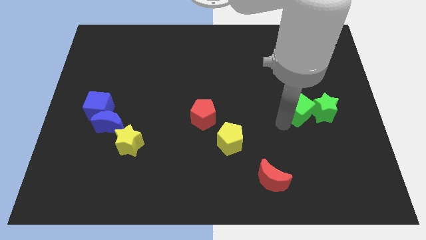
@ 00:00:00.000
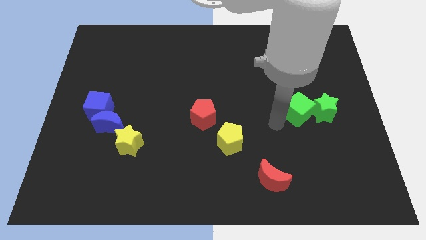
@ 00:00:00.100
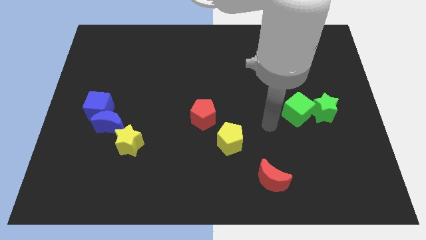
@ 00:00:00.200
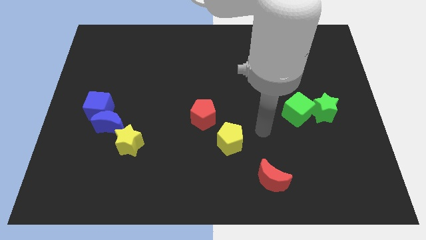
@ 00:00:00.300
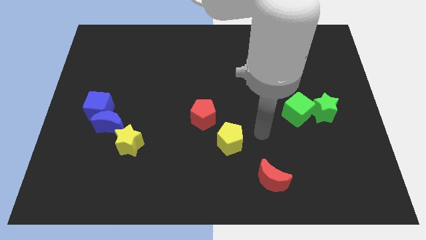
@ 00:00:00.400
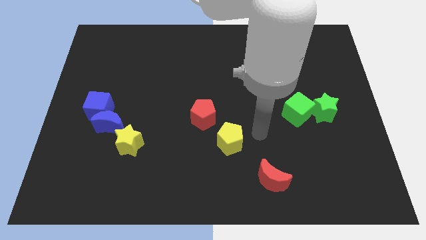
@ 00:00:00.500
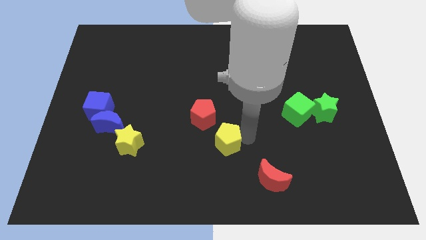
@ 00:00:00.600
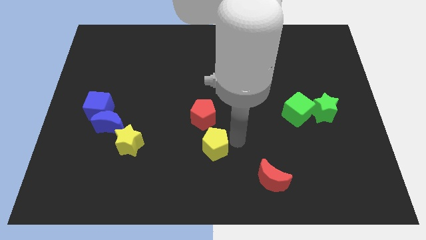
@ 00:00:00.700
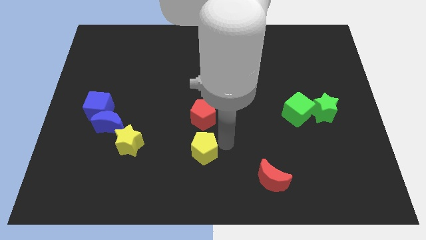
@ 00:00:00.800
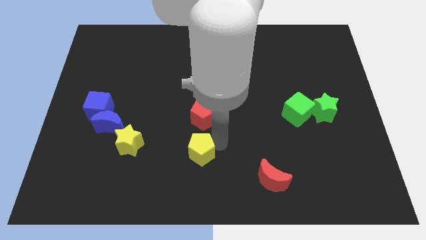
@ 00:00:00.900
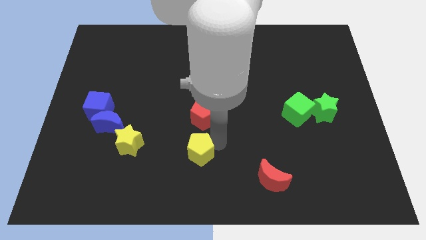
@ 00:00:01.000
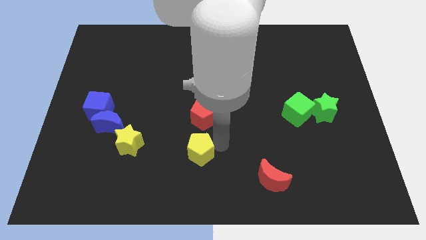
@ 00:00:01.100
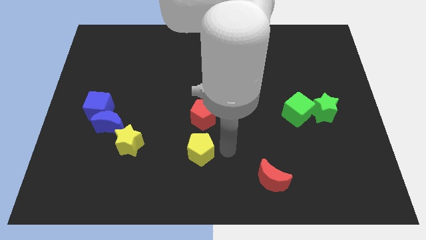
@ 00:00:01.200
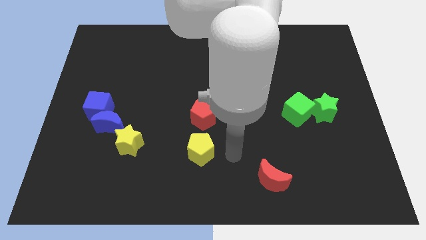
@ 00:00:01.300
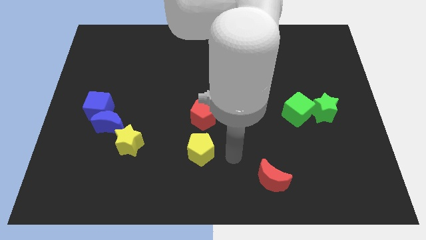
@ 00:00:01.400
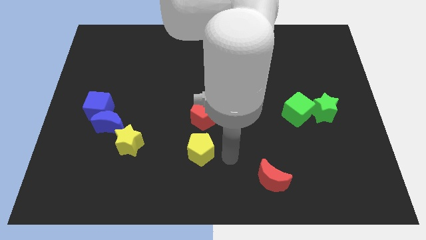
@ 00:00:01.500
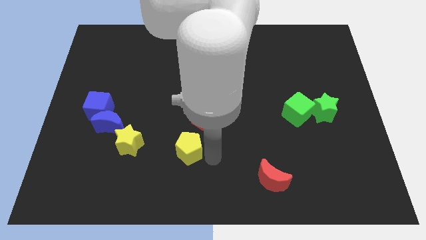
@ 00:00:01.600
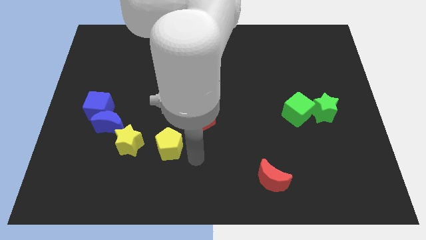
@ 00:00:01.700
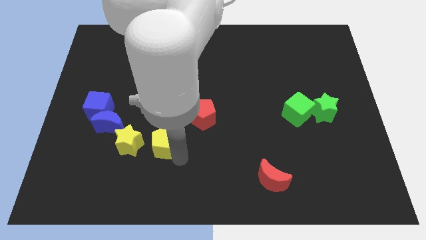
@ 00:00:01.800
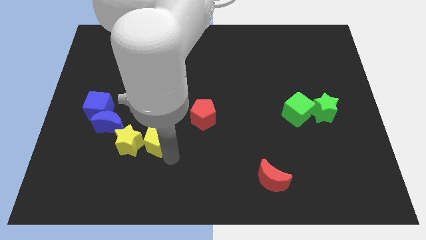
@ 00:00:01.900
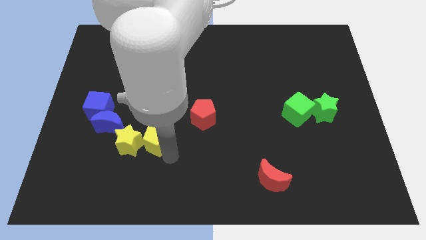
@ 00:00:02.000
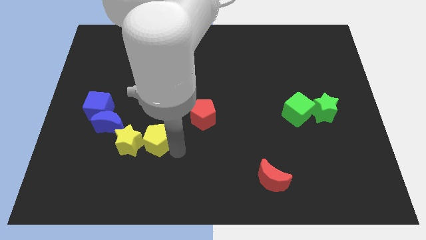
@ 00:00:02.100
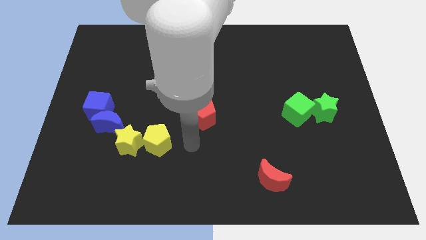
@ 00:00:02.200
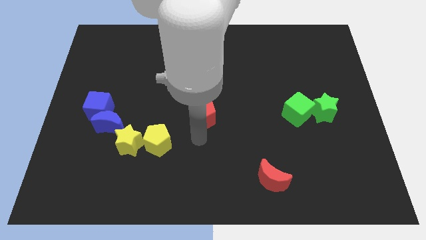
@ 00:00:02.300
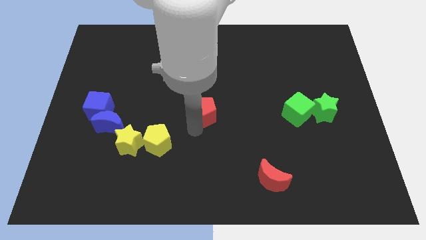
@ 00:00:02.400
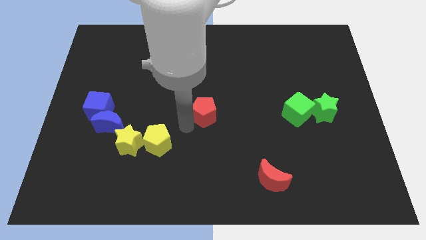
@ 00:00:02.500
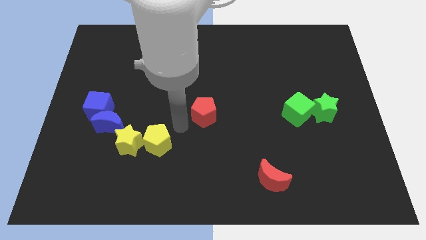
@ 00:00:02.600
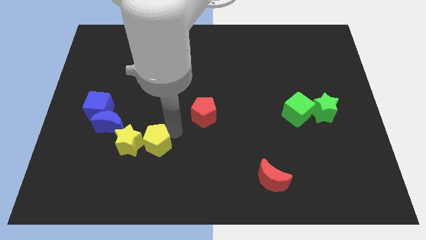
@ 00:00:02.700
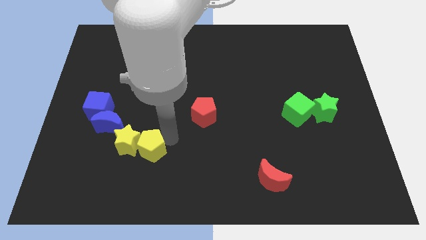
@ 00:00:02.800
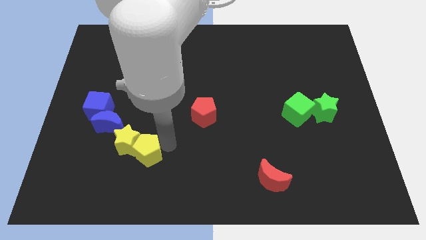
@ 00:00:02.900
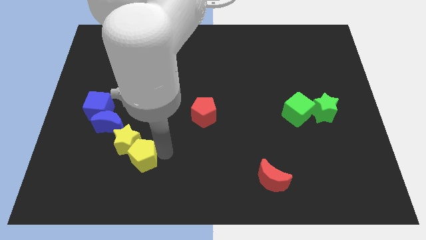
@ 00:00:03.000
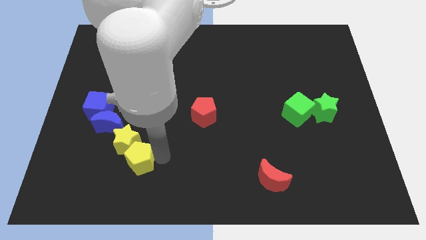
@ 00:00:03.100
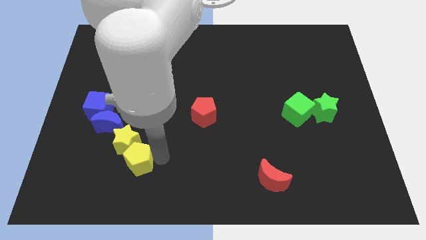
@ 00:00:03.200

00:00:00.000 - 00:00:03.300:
place the yellow pentagon diagonally below the bottom right side of the yellow star

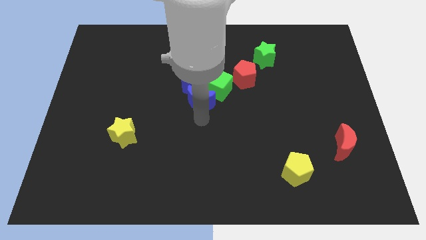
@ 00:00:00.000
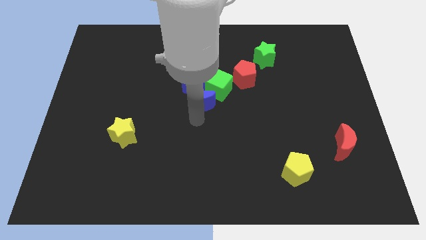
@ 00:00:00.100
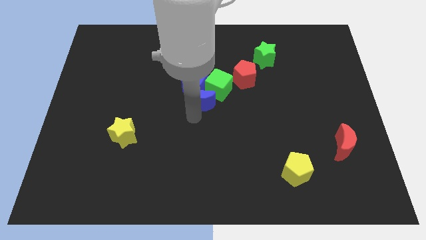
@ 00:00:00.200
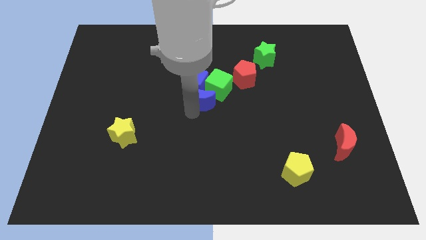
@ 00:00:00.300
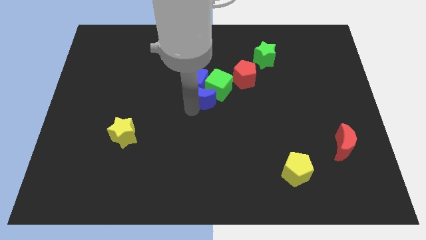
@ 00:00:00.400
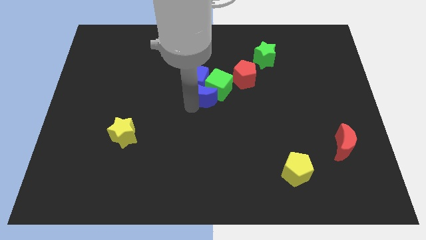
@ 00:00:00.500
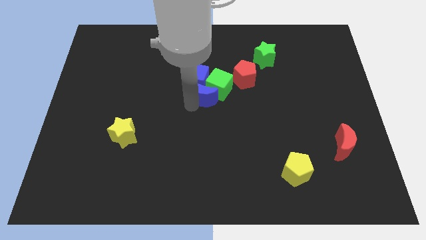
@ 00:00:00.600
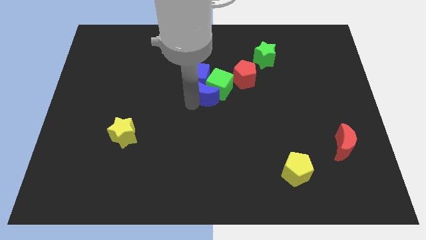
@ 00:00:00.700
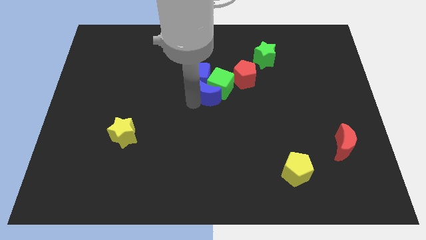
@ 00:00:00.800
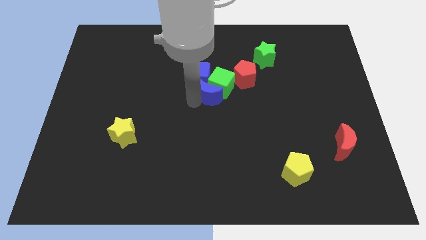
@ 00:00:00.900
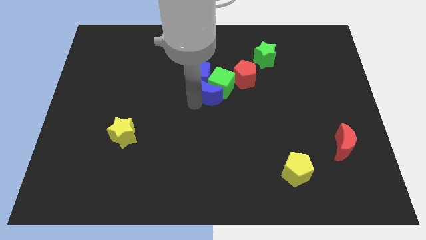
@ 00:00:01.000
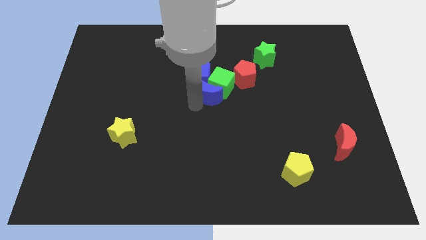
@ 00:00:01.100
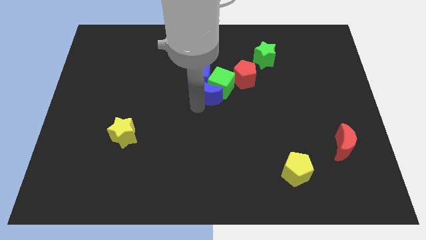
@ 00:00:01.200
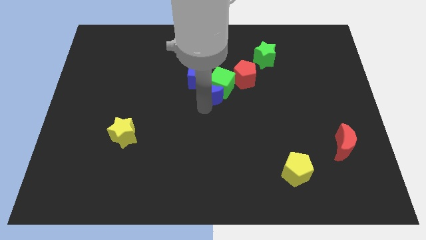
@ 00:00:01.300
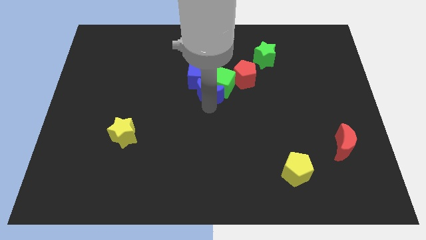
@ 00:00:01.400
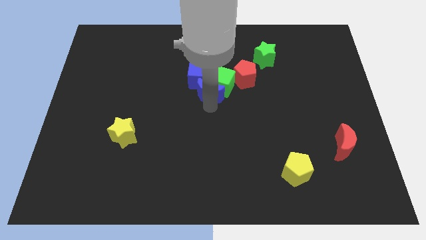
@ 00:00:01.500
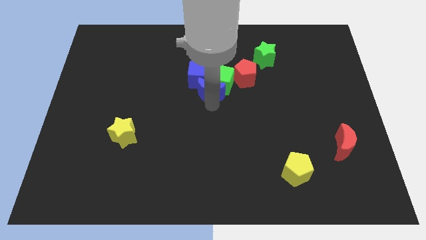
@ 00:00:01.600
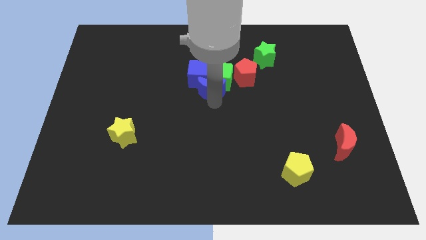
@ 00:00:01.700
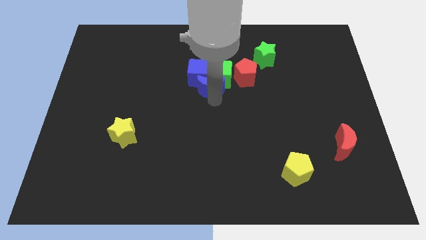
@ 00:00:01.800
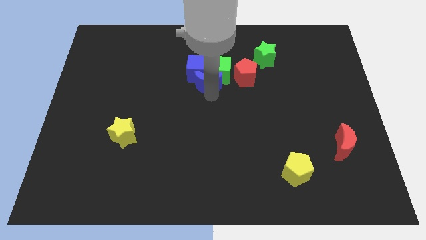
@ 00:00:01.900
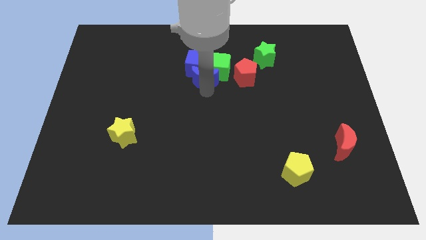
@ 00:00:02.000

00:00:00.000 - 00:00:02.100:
move the blue crescent and blue cube towards the top

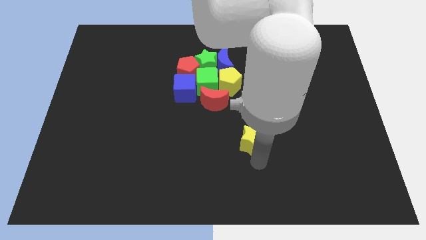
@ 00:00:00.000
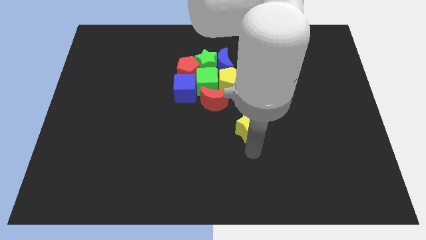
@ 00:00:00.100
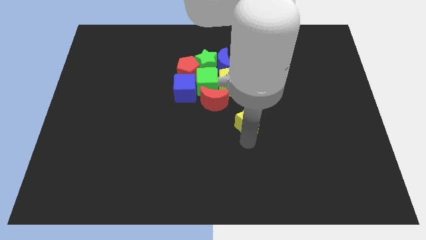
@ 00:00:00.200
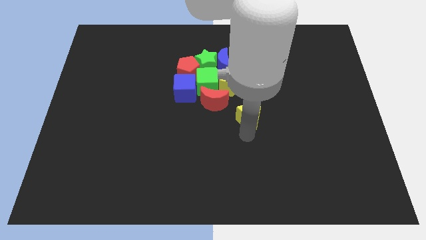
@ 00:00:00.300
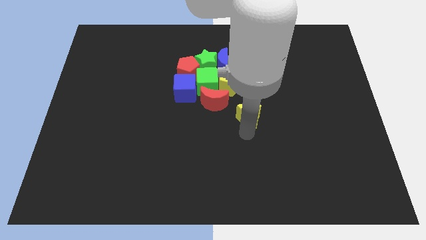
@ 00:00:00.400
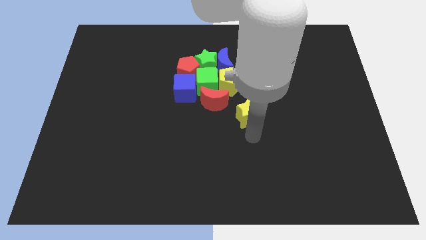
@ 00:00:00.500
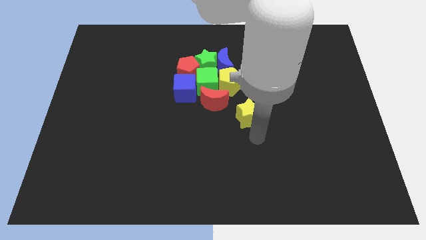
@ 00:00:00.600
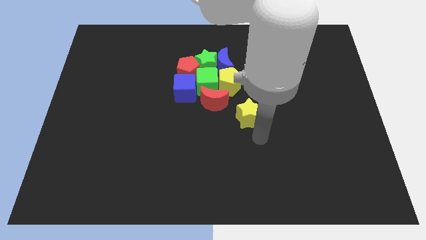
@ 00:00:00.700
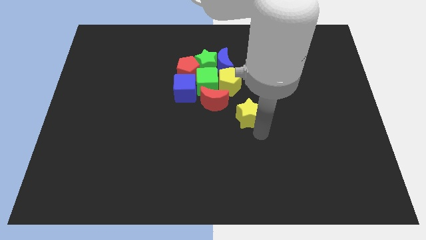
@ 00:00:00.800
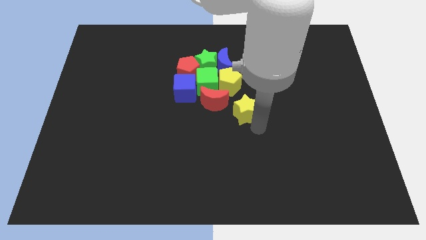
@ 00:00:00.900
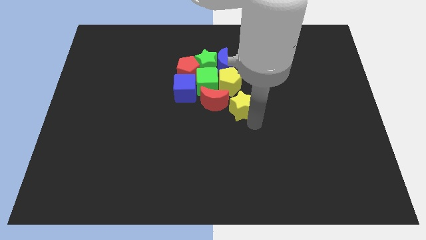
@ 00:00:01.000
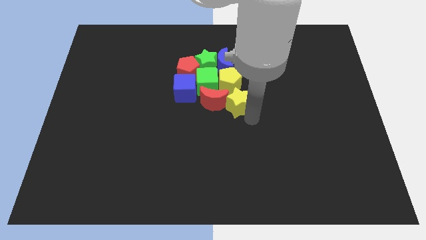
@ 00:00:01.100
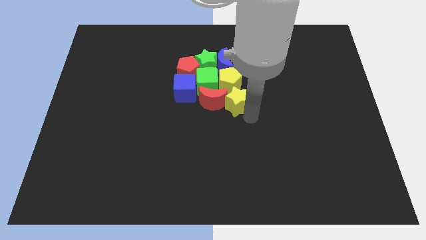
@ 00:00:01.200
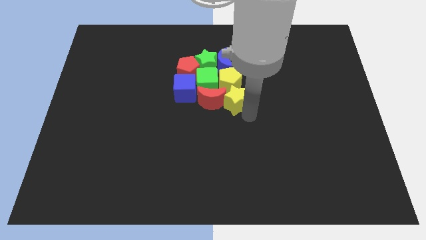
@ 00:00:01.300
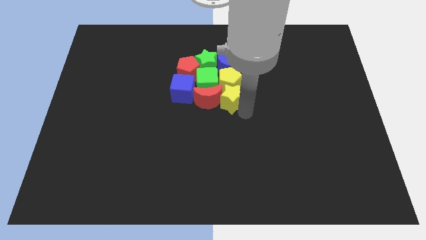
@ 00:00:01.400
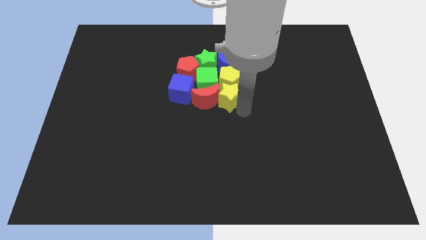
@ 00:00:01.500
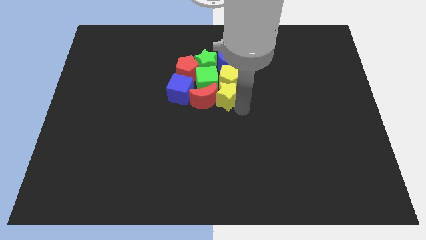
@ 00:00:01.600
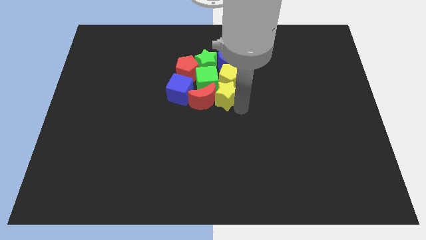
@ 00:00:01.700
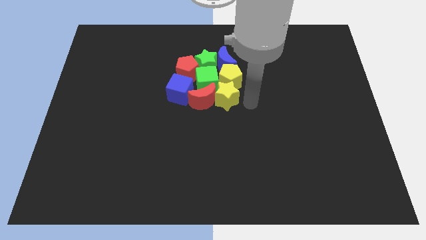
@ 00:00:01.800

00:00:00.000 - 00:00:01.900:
push the yellow star into the right side of the red moon

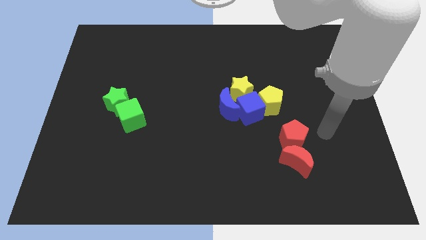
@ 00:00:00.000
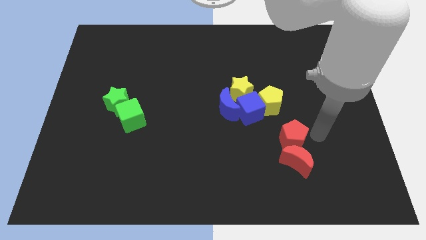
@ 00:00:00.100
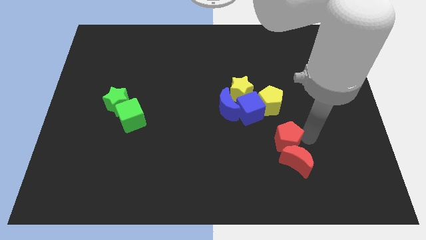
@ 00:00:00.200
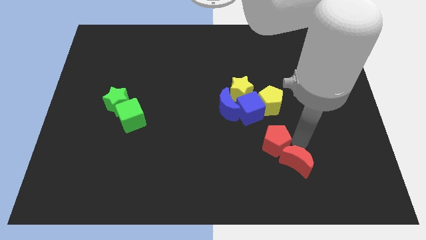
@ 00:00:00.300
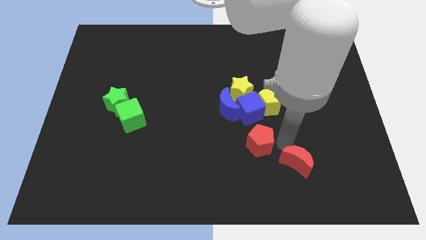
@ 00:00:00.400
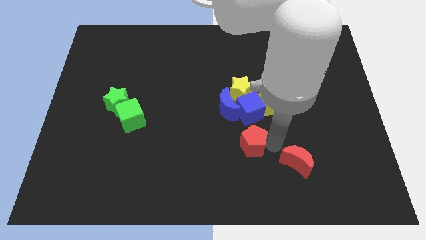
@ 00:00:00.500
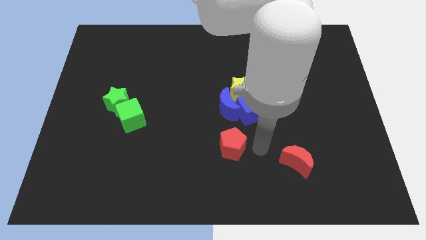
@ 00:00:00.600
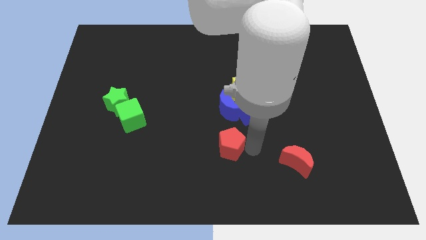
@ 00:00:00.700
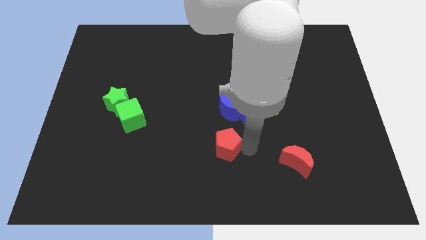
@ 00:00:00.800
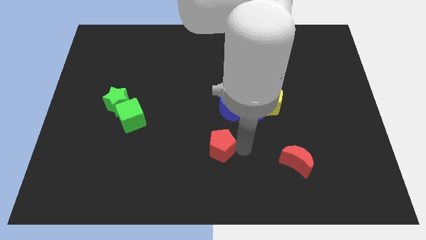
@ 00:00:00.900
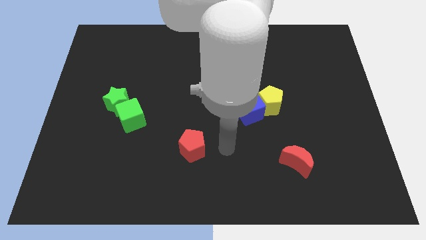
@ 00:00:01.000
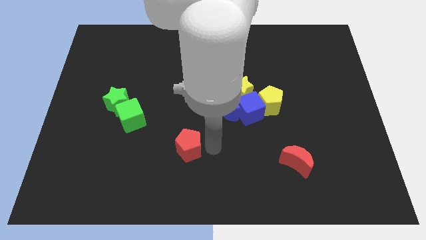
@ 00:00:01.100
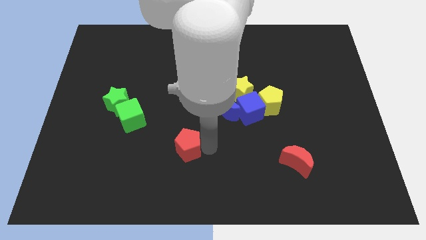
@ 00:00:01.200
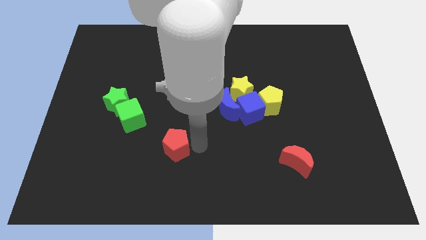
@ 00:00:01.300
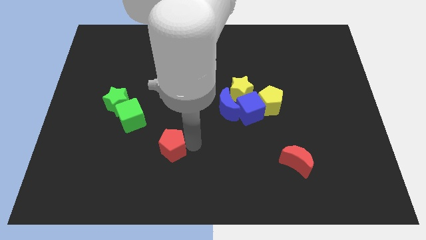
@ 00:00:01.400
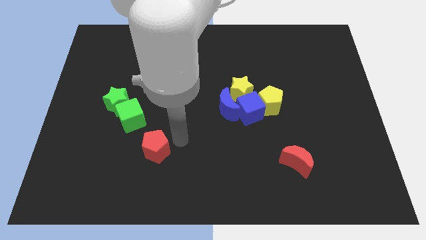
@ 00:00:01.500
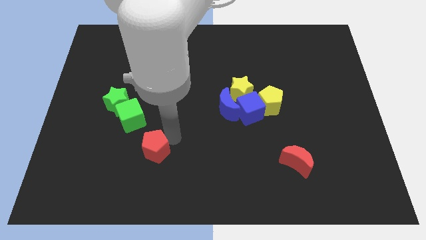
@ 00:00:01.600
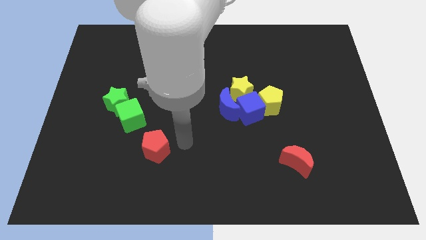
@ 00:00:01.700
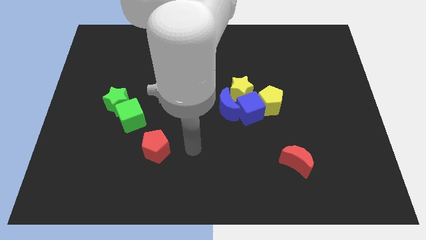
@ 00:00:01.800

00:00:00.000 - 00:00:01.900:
separate the red pentagon from the red moon
